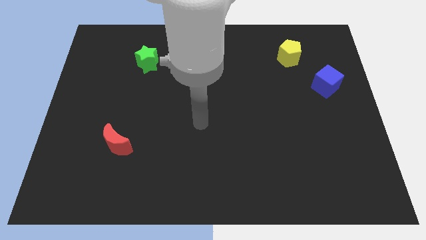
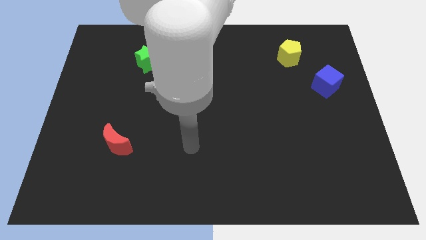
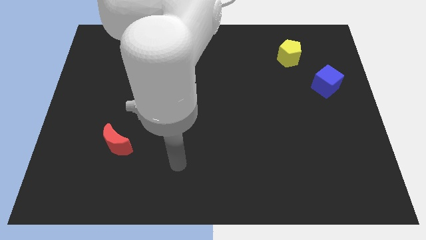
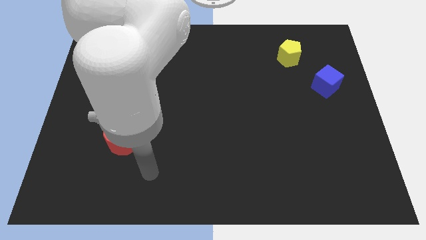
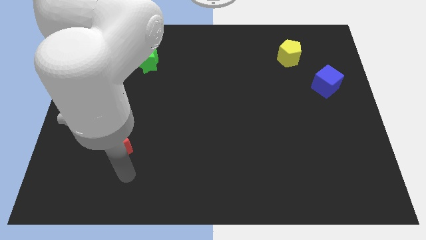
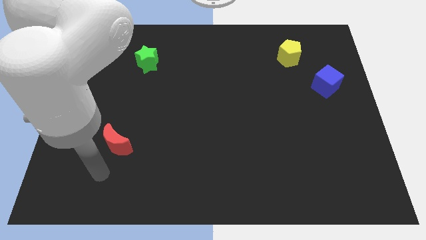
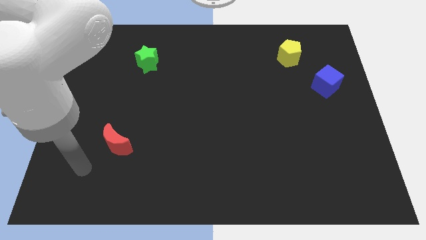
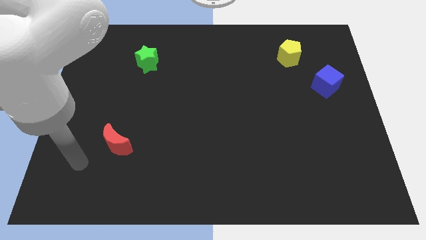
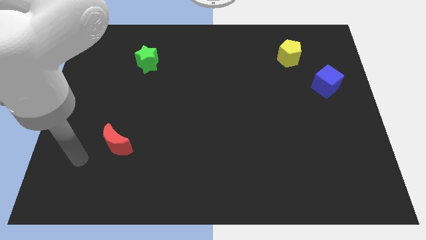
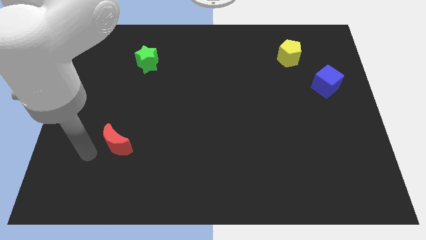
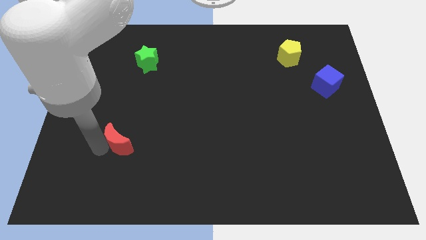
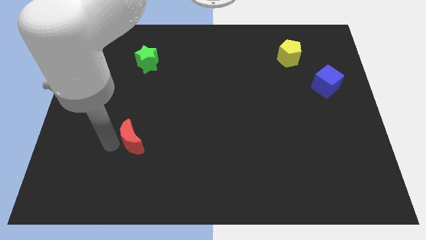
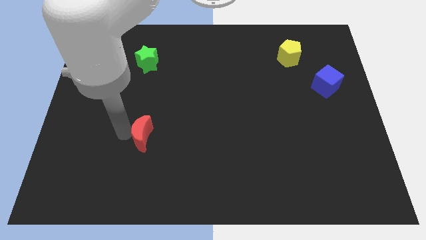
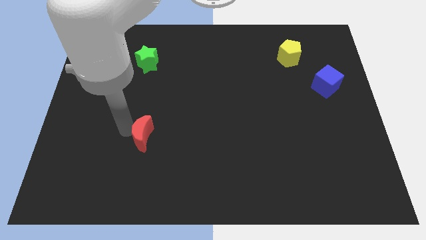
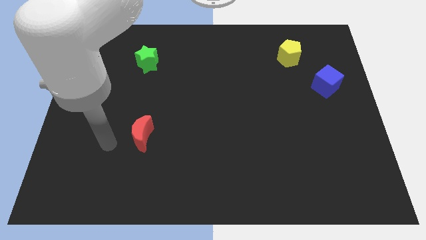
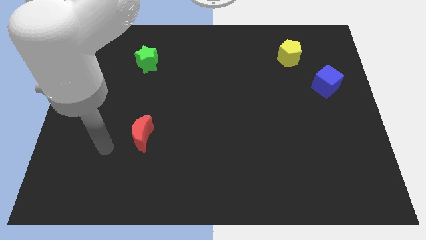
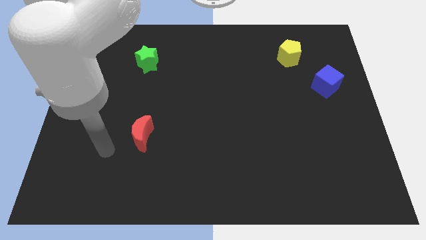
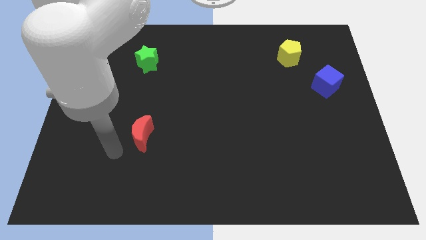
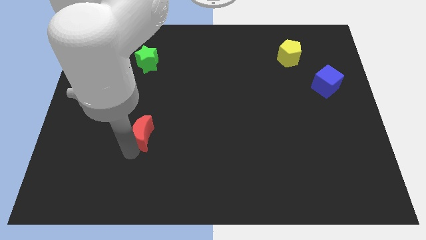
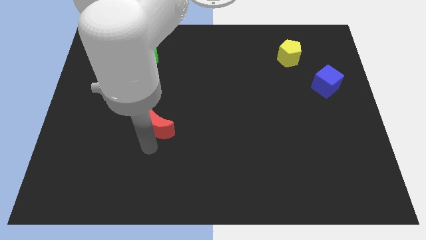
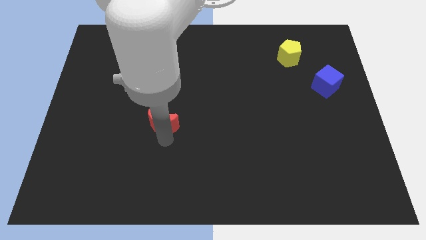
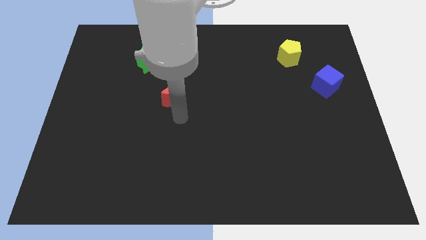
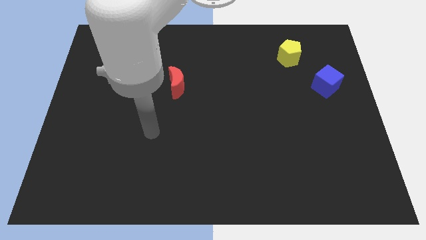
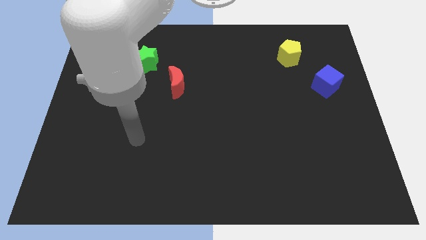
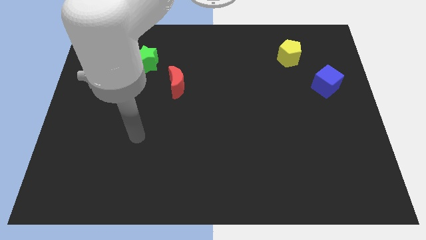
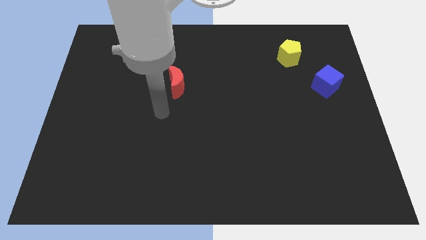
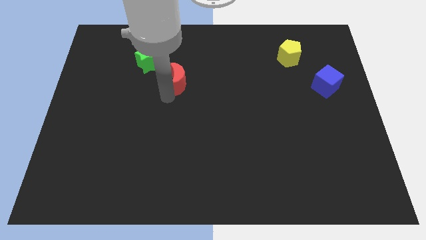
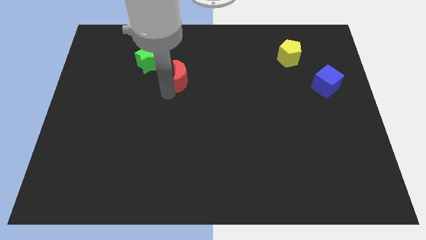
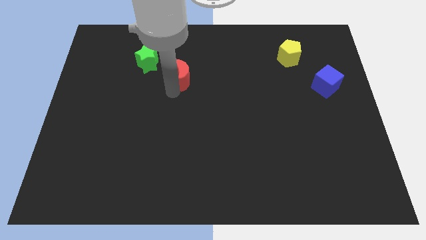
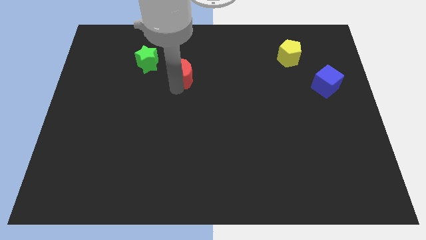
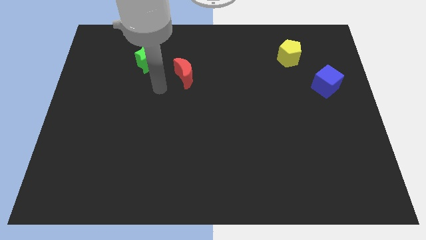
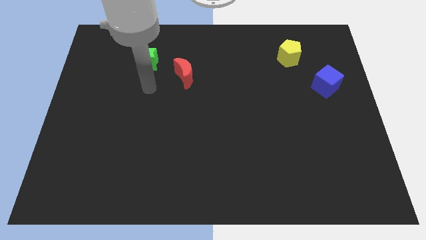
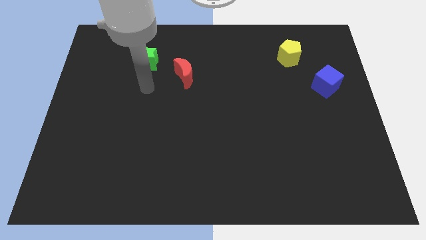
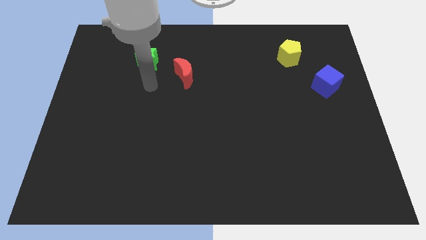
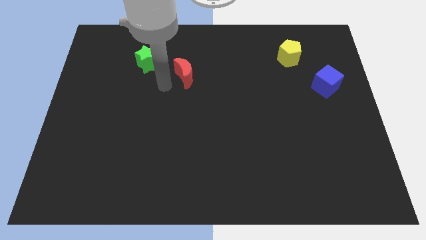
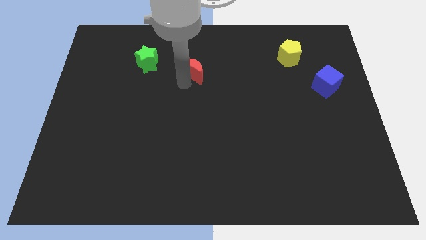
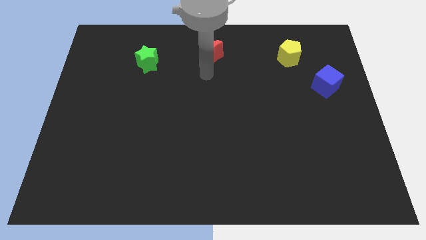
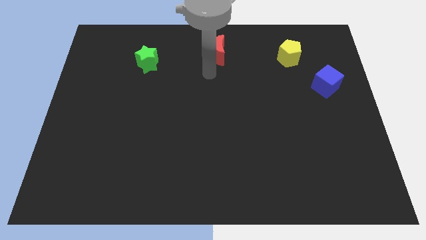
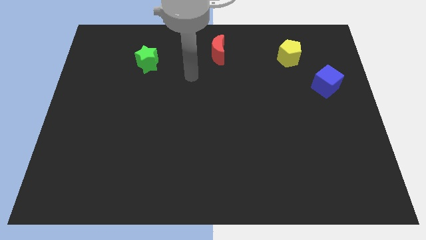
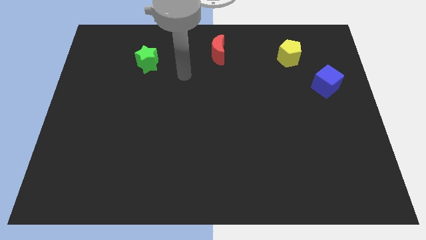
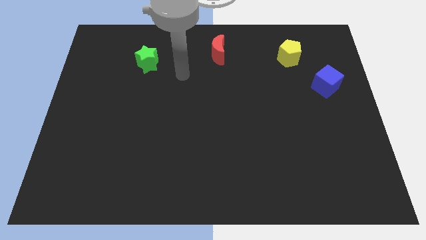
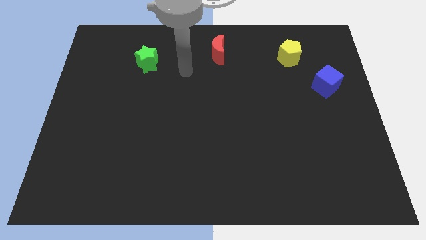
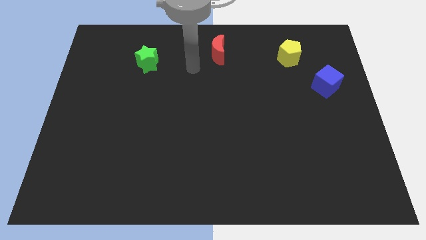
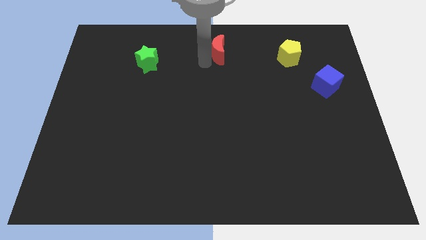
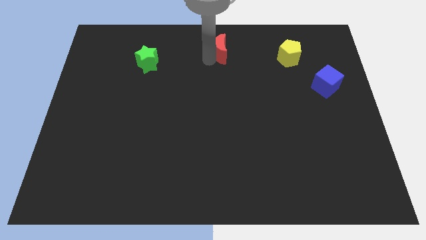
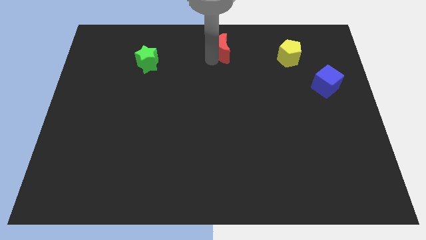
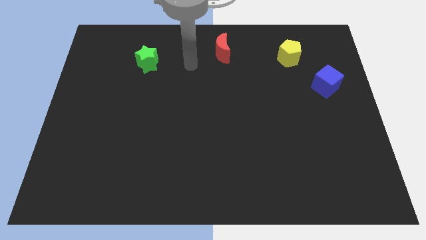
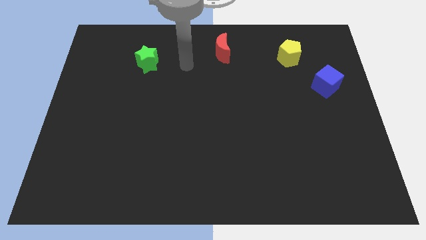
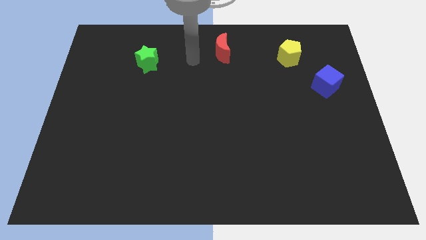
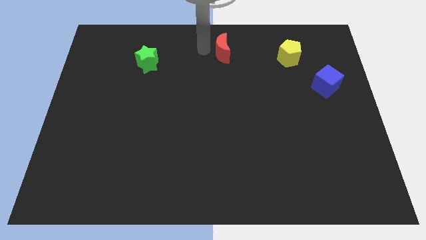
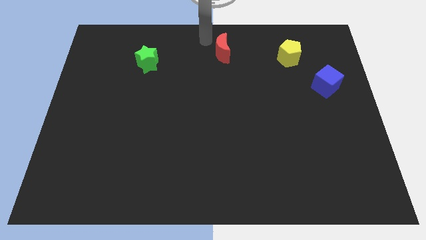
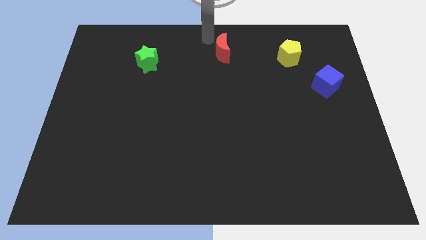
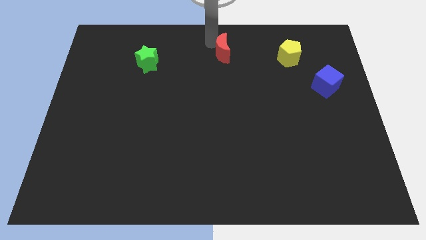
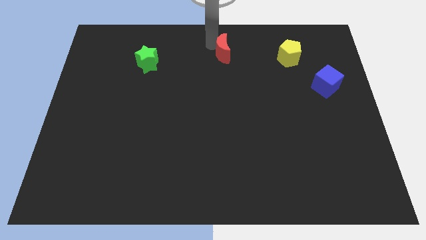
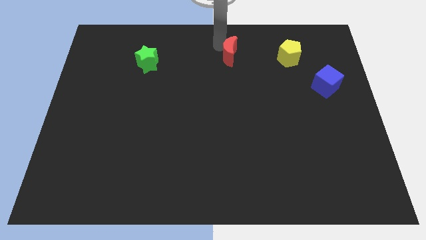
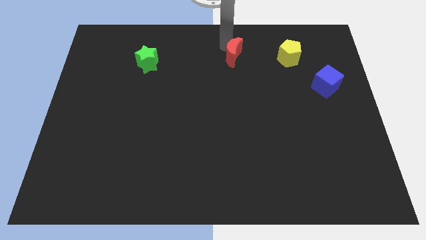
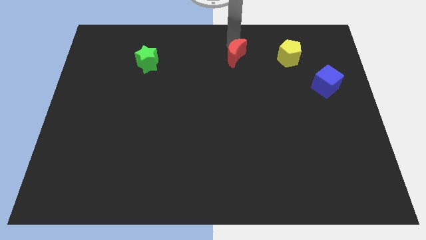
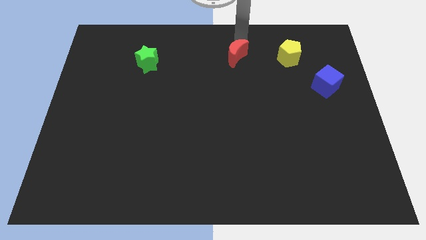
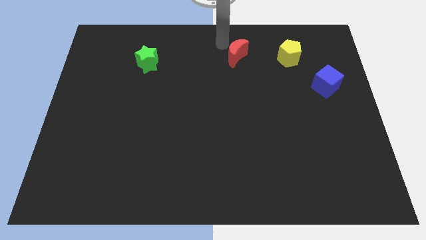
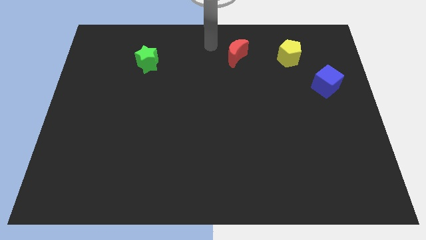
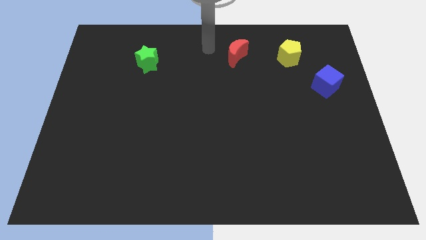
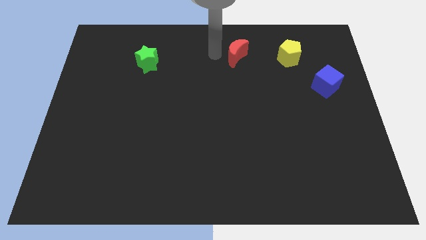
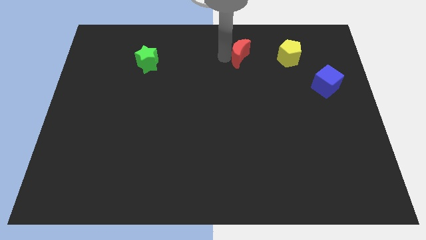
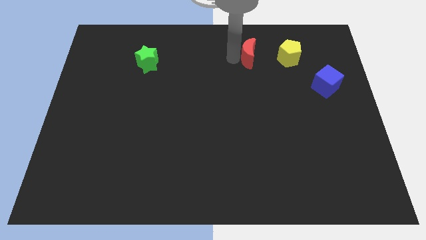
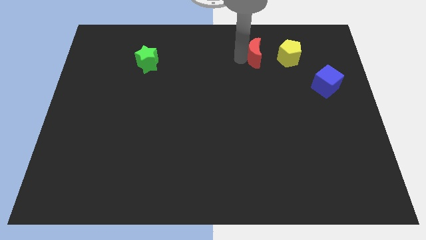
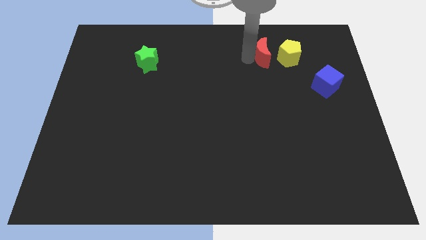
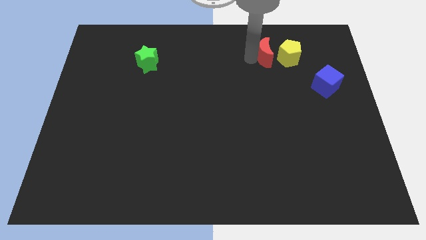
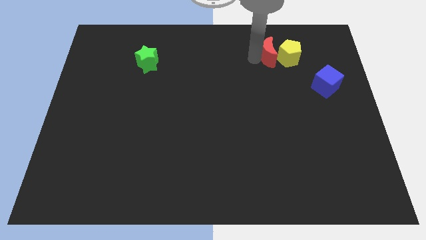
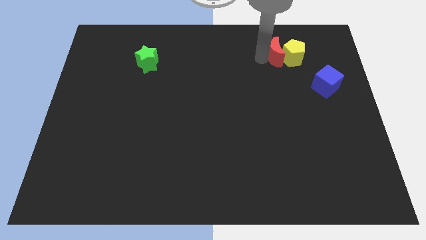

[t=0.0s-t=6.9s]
slide the moon towards the yellow pentagon

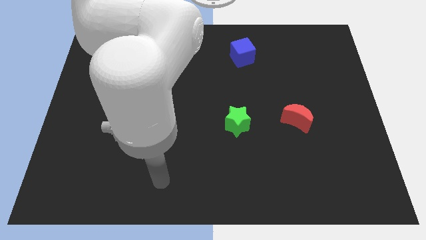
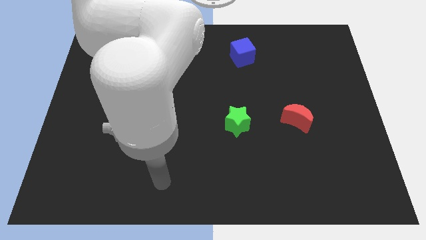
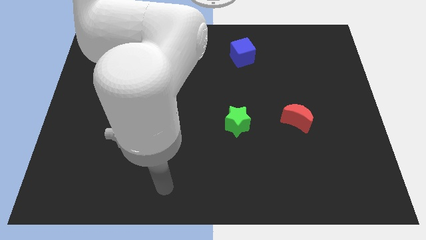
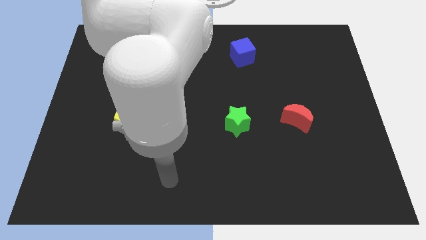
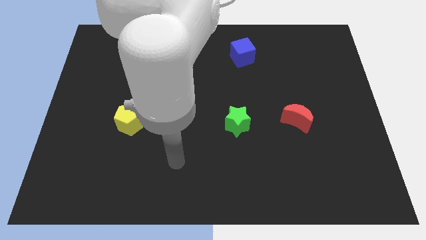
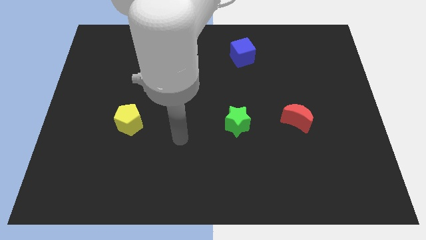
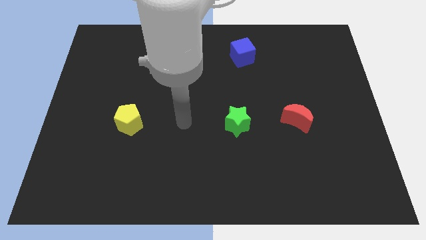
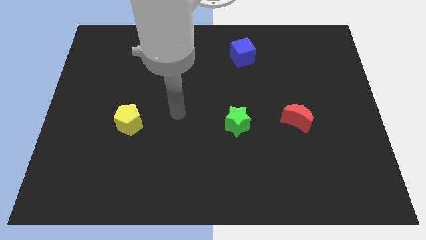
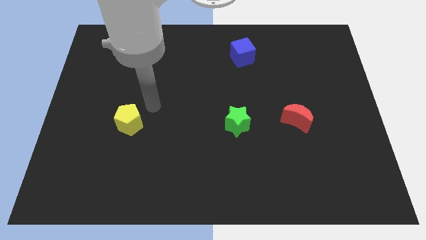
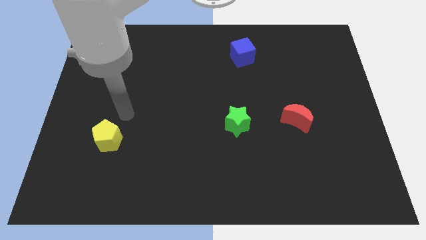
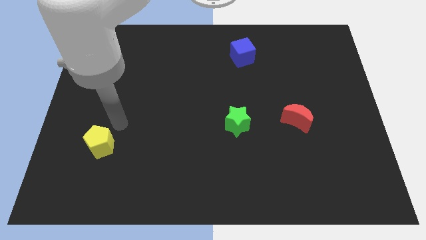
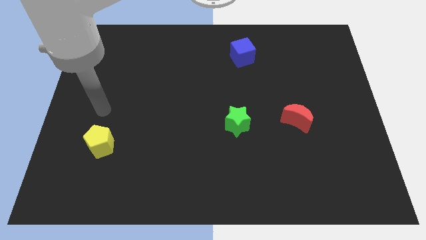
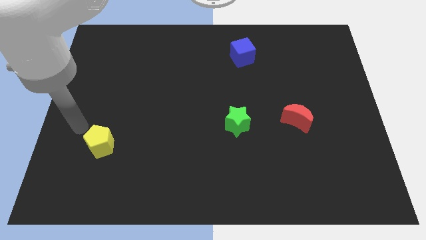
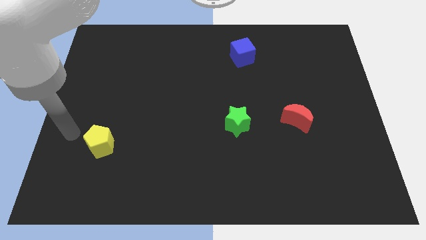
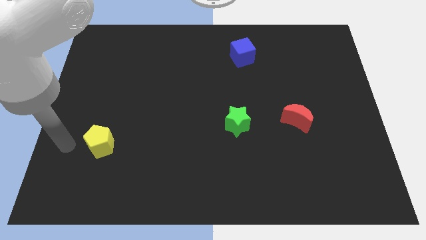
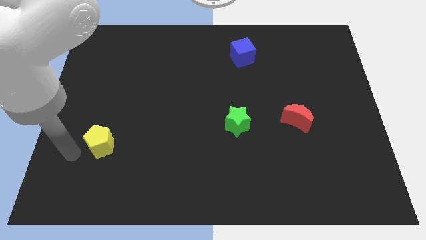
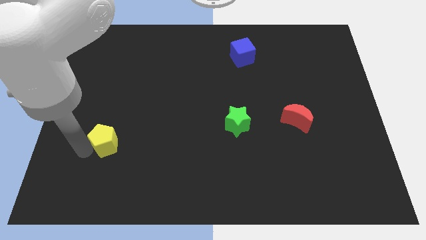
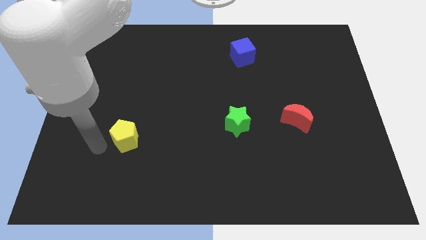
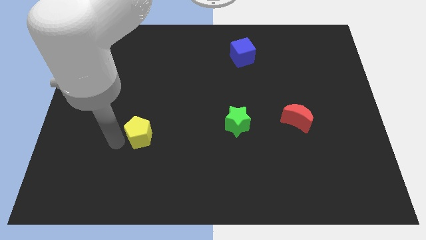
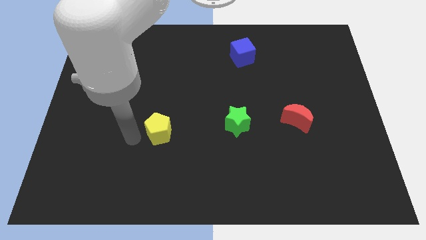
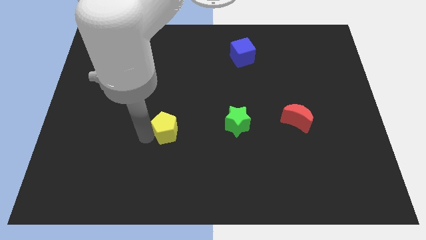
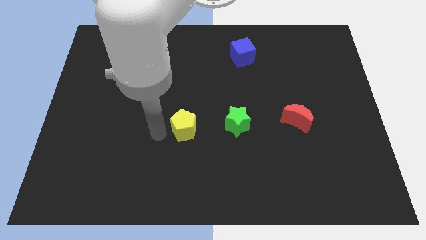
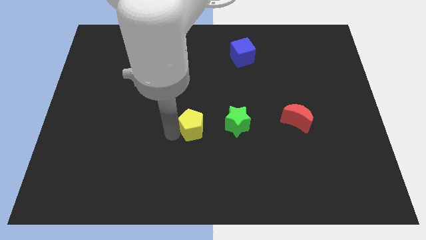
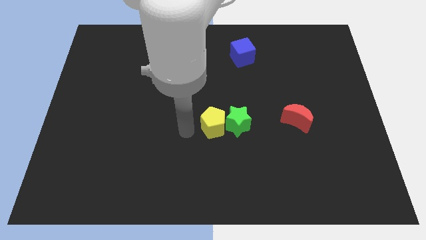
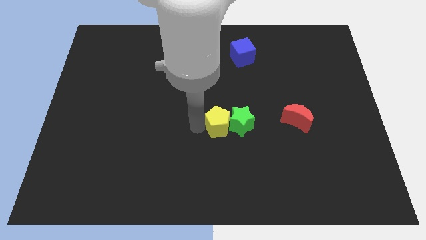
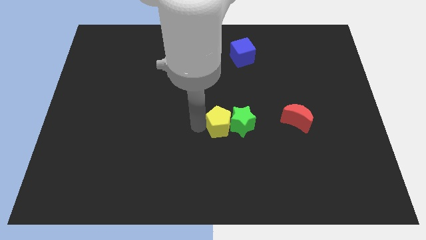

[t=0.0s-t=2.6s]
move the yellow pentagon close to the star
